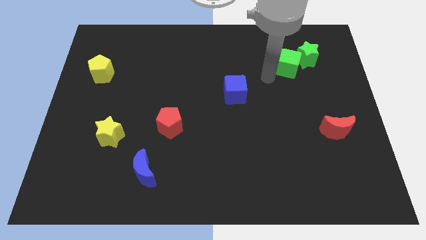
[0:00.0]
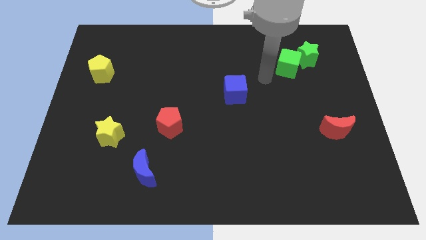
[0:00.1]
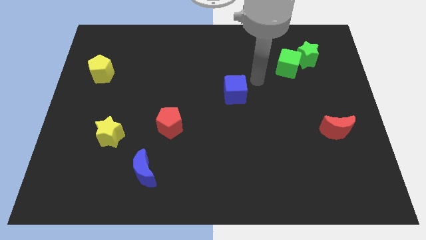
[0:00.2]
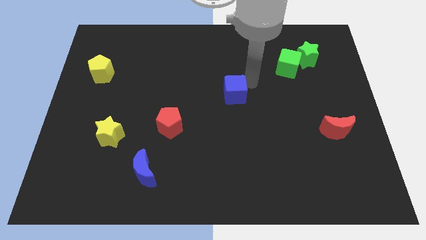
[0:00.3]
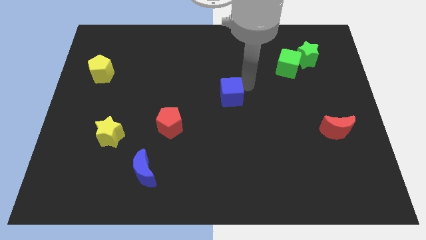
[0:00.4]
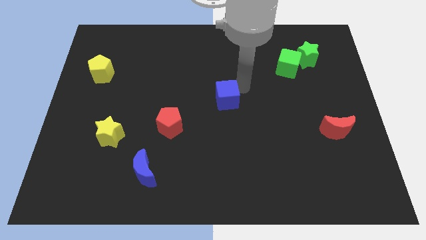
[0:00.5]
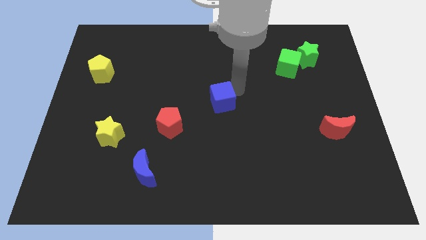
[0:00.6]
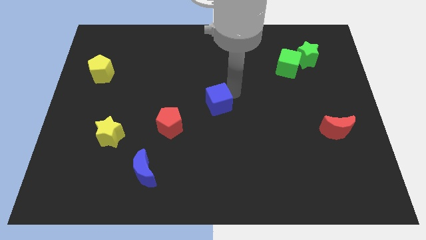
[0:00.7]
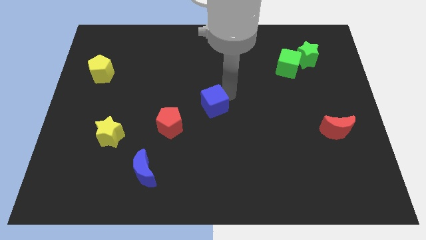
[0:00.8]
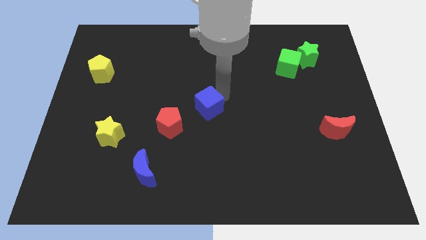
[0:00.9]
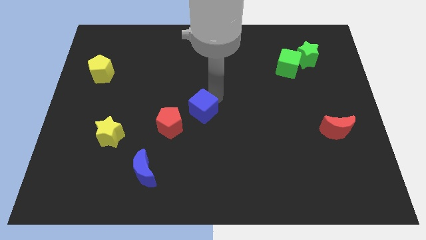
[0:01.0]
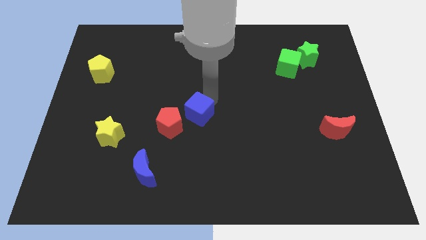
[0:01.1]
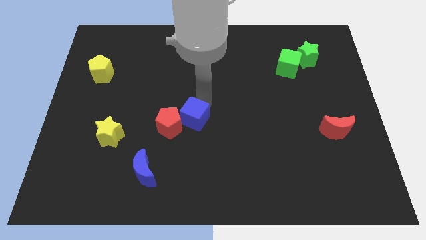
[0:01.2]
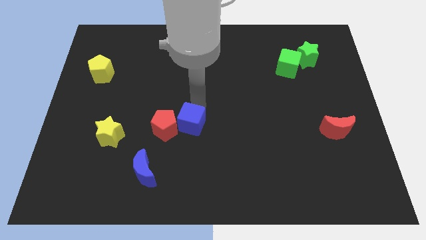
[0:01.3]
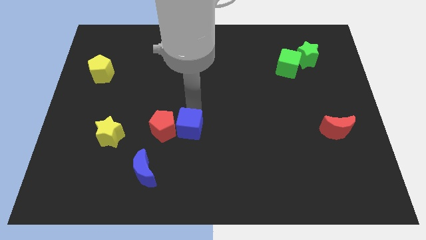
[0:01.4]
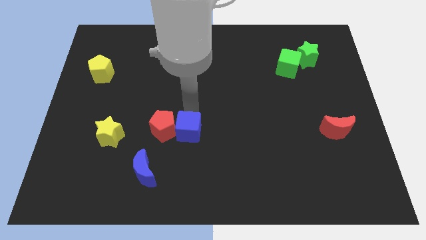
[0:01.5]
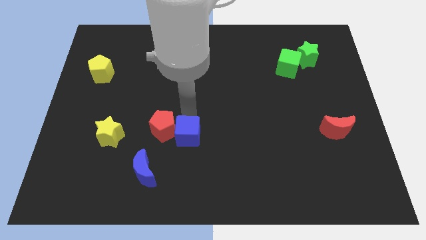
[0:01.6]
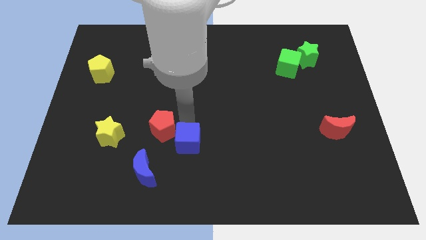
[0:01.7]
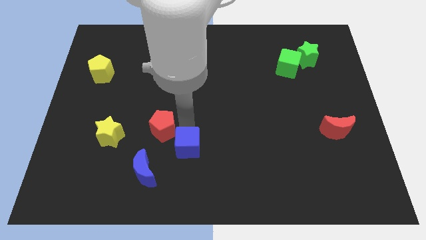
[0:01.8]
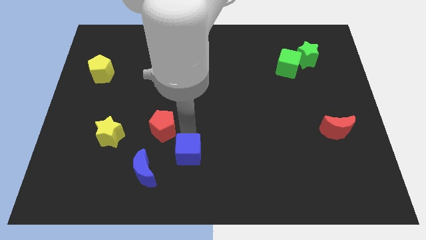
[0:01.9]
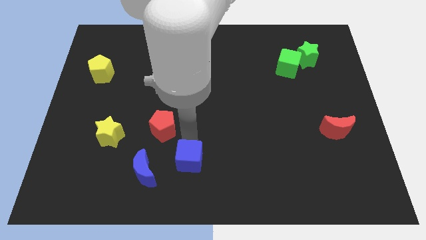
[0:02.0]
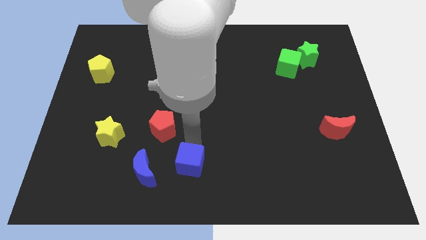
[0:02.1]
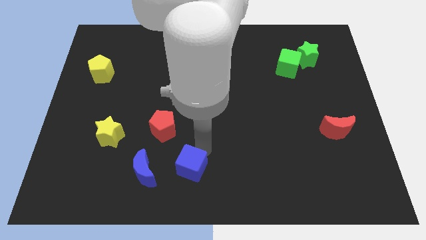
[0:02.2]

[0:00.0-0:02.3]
push the blue cube to right of the blue crescent

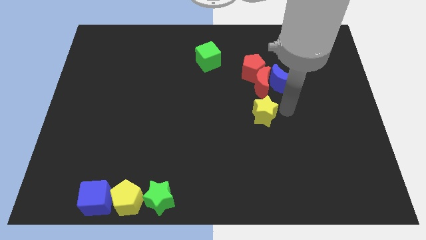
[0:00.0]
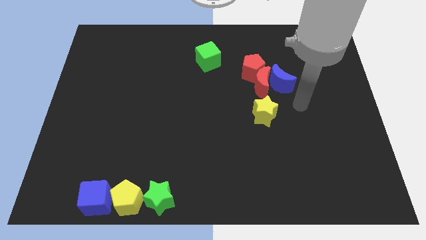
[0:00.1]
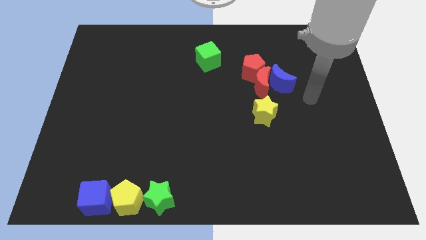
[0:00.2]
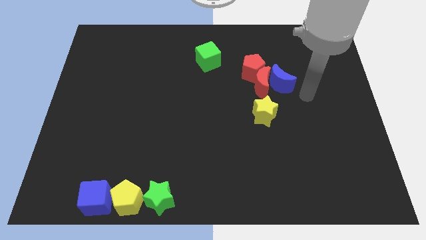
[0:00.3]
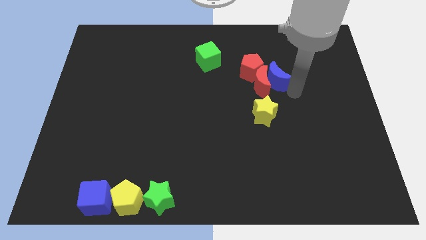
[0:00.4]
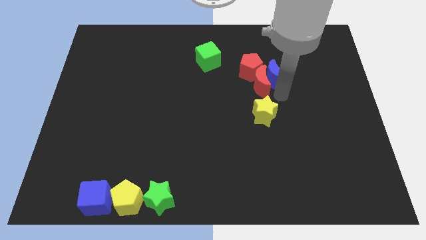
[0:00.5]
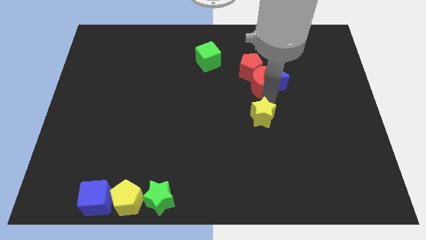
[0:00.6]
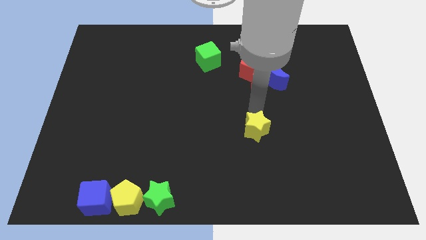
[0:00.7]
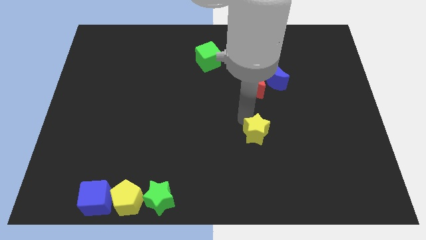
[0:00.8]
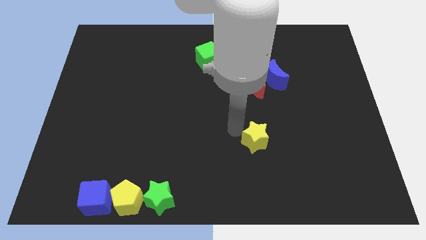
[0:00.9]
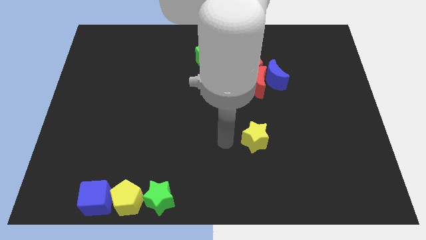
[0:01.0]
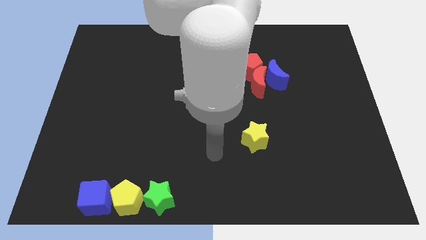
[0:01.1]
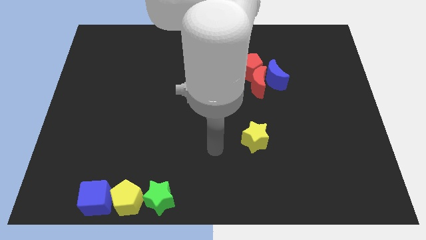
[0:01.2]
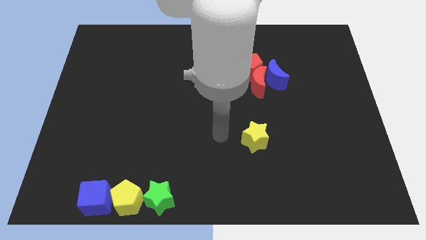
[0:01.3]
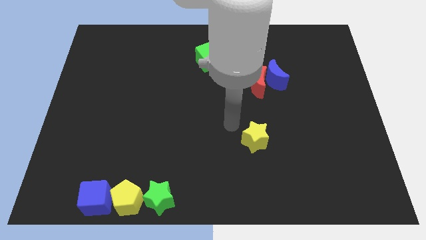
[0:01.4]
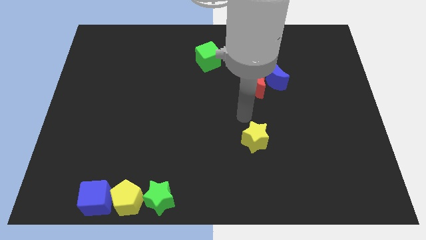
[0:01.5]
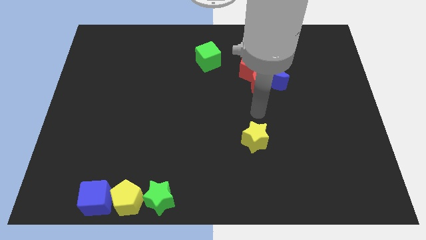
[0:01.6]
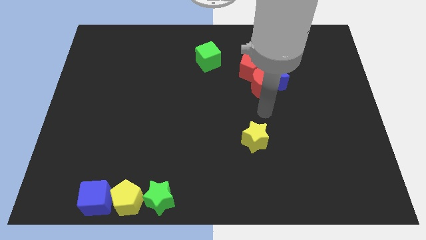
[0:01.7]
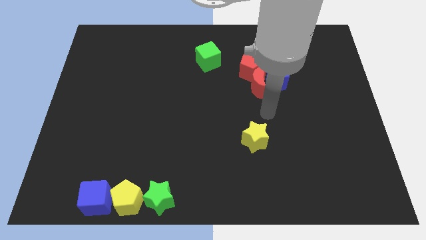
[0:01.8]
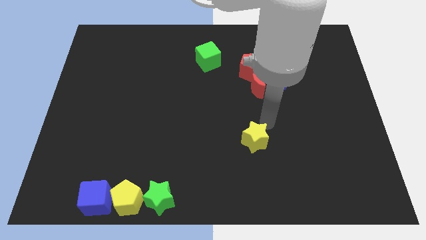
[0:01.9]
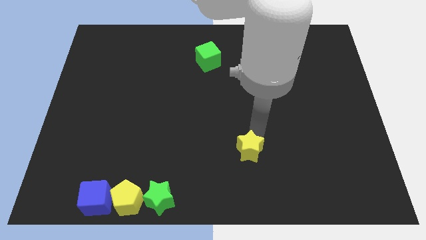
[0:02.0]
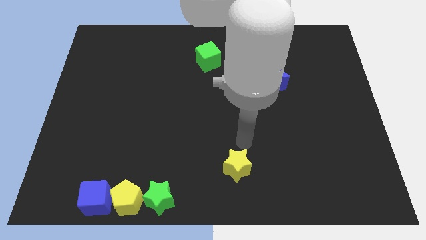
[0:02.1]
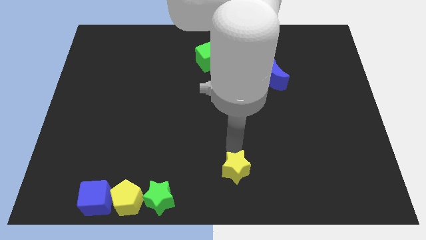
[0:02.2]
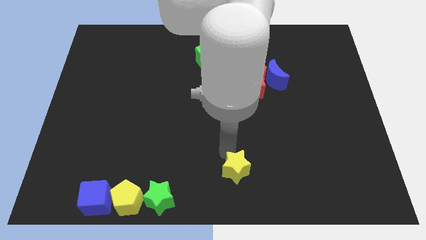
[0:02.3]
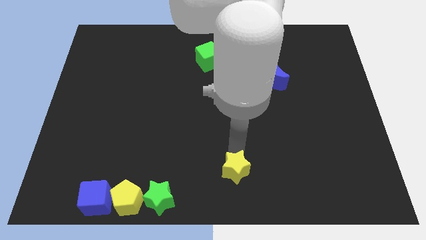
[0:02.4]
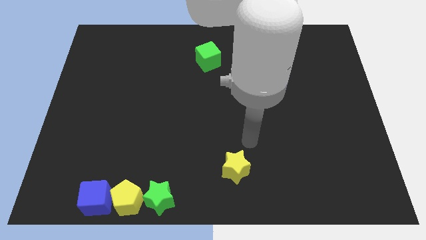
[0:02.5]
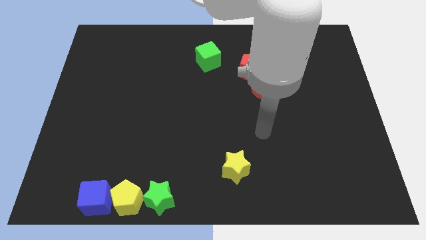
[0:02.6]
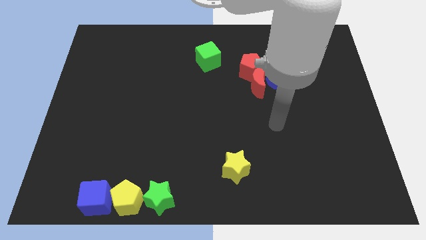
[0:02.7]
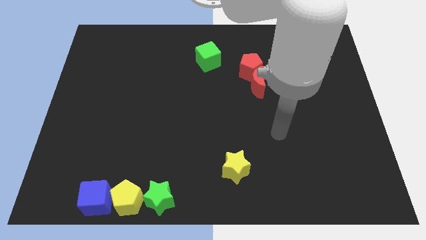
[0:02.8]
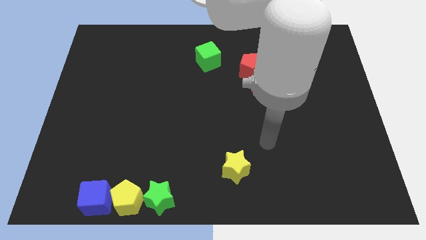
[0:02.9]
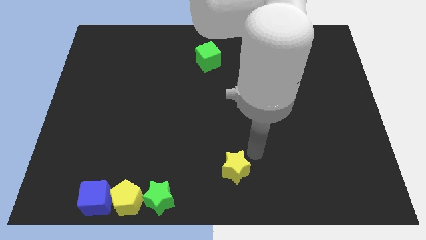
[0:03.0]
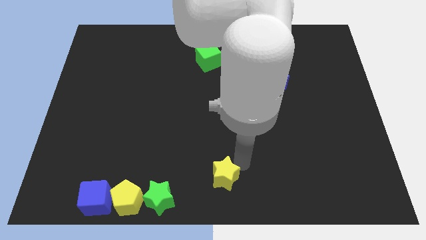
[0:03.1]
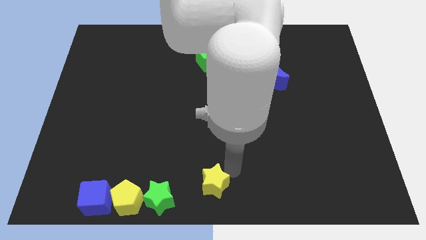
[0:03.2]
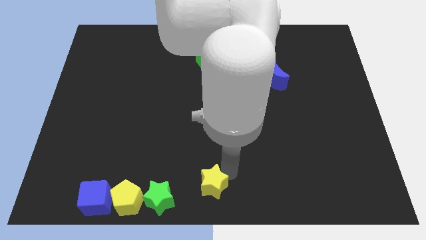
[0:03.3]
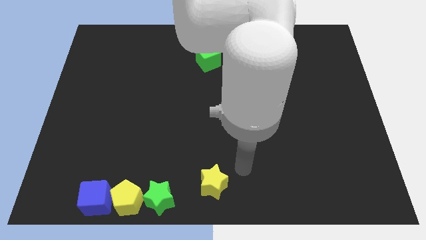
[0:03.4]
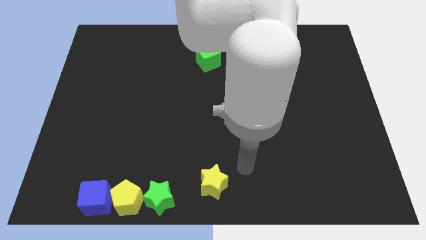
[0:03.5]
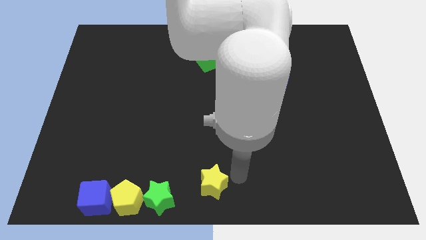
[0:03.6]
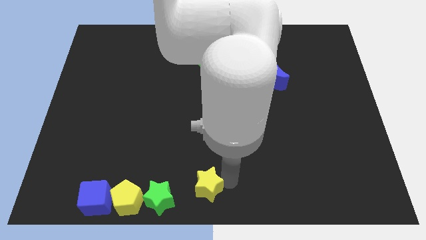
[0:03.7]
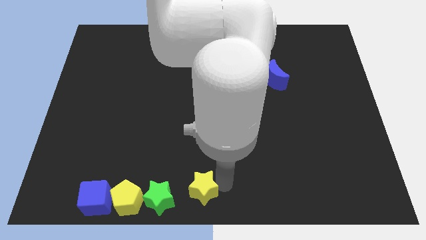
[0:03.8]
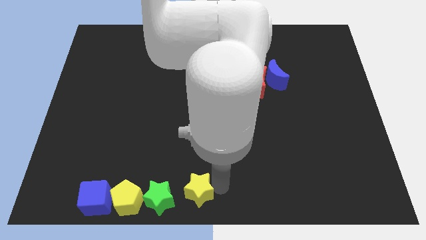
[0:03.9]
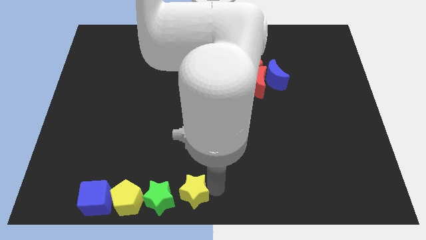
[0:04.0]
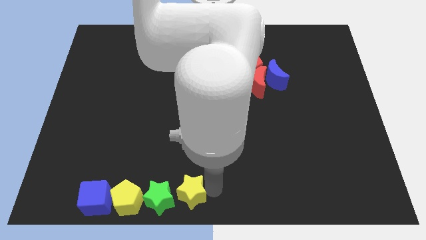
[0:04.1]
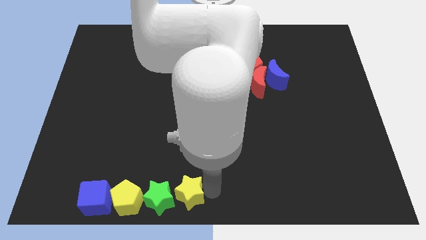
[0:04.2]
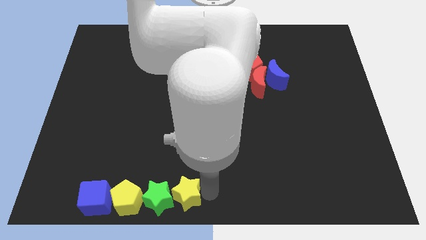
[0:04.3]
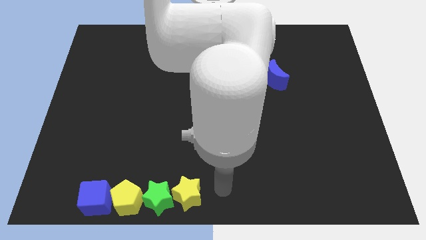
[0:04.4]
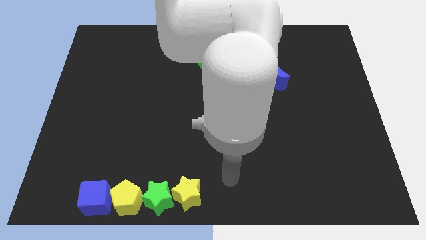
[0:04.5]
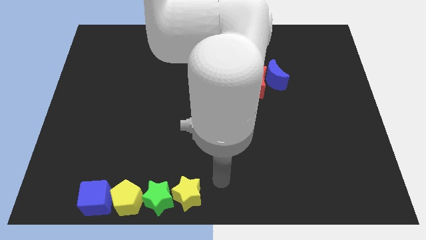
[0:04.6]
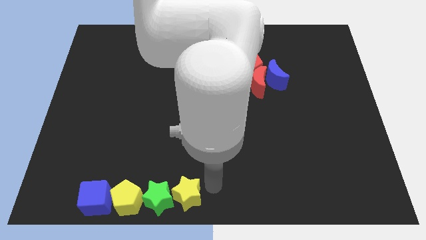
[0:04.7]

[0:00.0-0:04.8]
place yellow star to the right of the green star

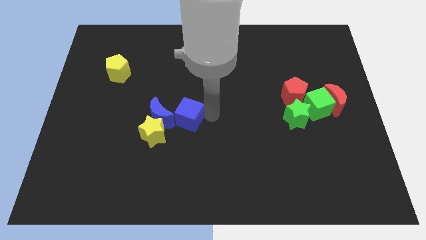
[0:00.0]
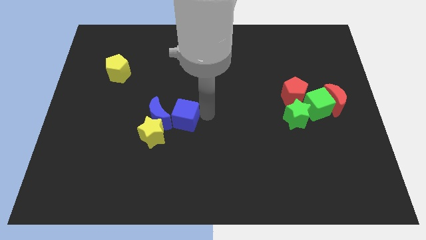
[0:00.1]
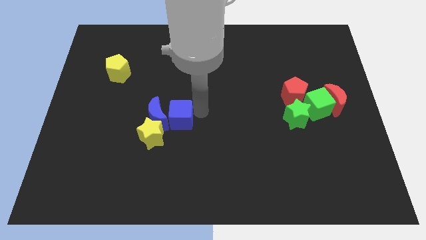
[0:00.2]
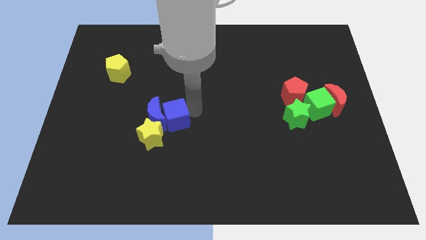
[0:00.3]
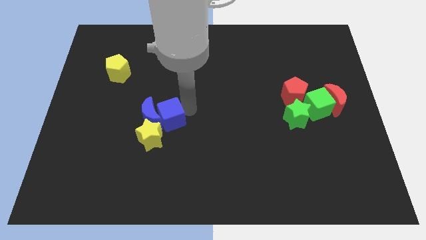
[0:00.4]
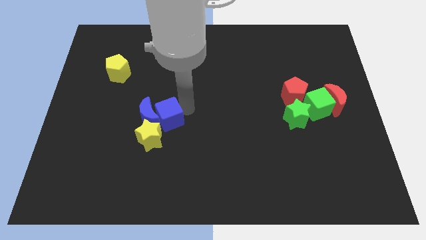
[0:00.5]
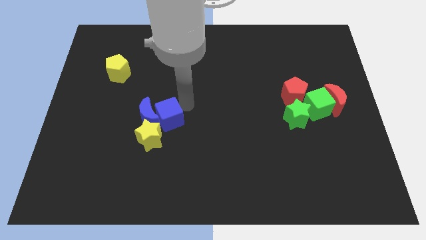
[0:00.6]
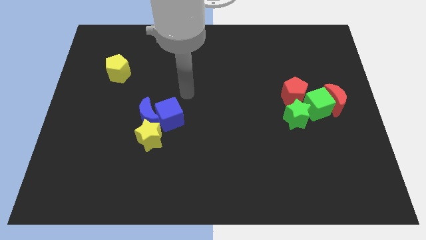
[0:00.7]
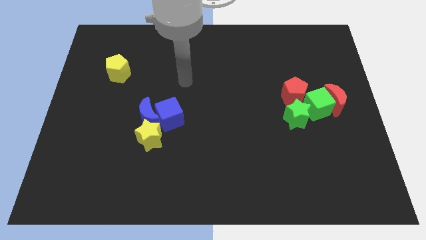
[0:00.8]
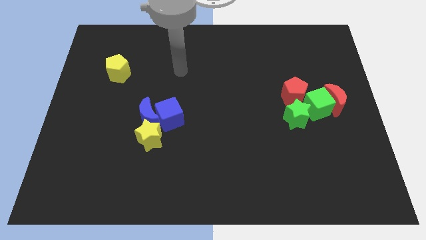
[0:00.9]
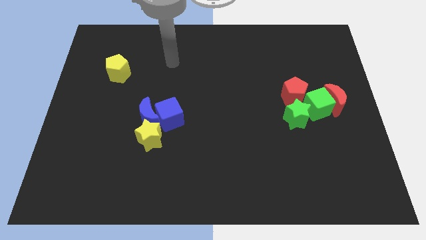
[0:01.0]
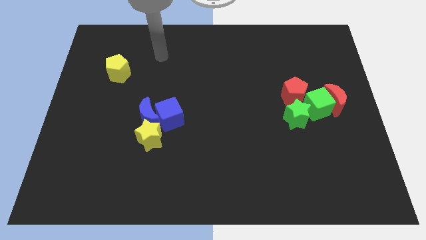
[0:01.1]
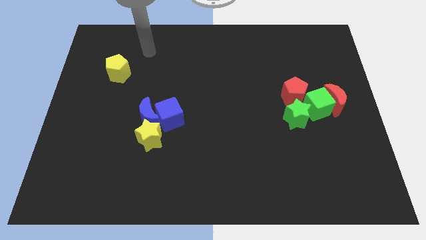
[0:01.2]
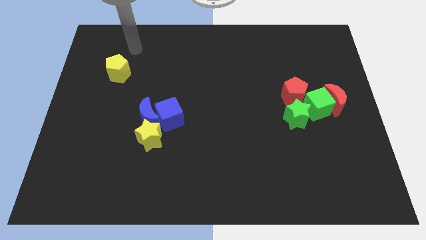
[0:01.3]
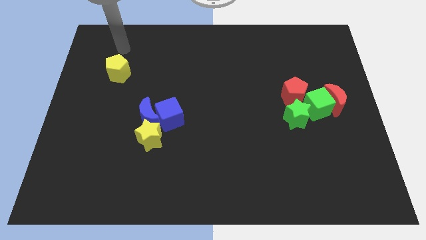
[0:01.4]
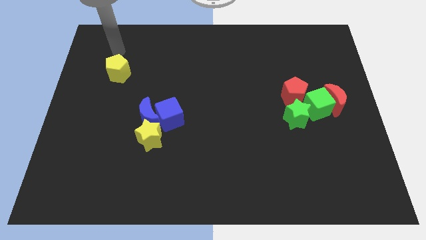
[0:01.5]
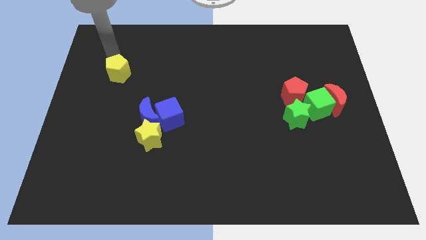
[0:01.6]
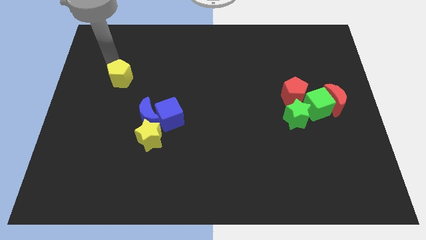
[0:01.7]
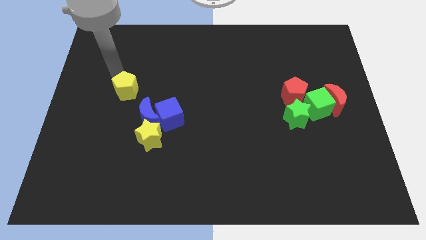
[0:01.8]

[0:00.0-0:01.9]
push blue cube towards left side
